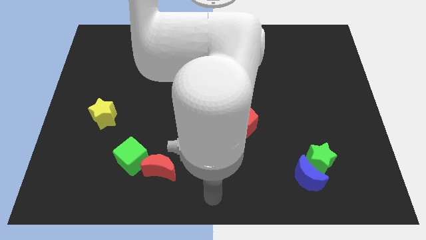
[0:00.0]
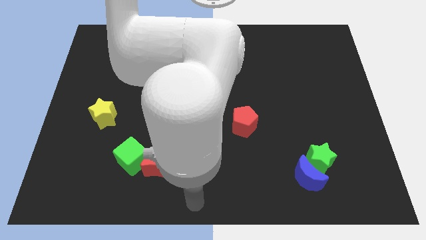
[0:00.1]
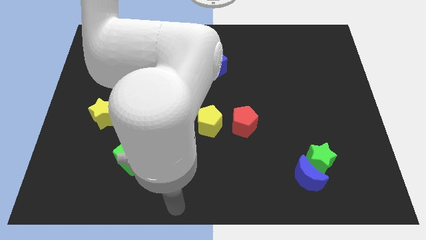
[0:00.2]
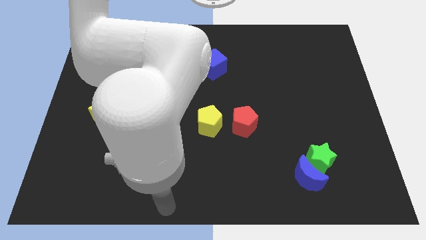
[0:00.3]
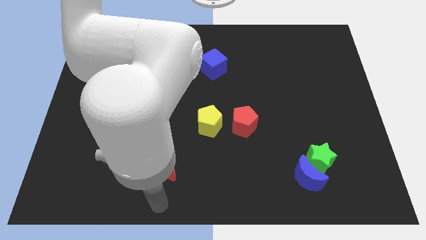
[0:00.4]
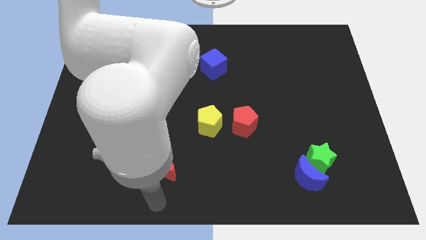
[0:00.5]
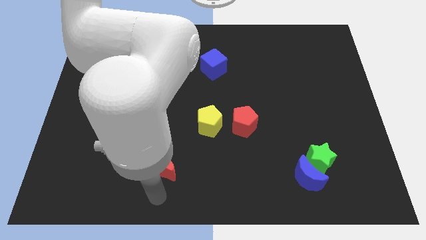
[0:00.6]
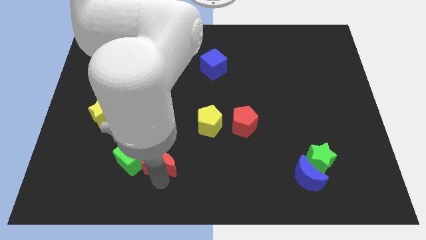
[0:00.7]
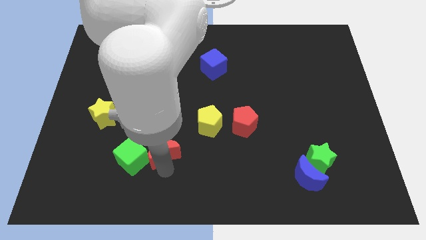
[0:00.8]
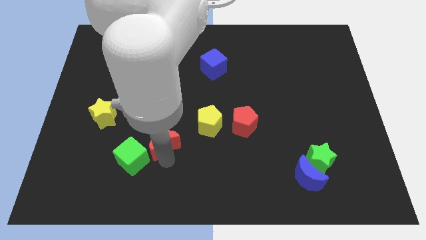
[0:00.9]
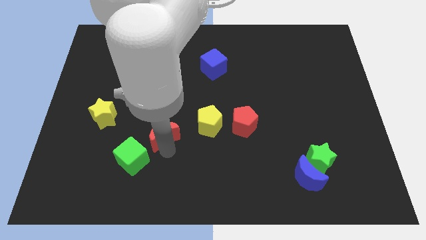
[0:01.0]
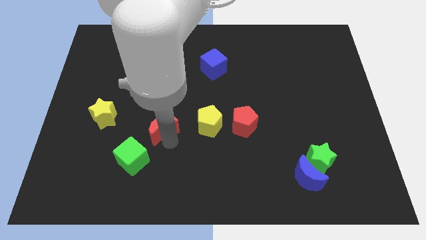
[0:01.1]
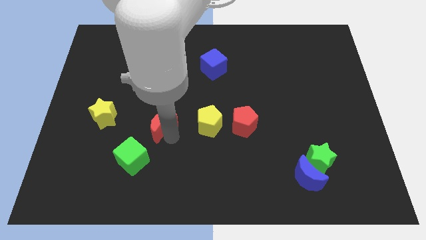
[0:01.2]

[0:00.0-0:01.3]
separate red moon from the green cube

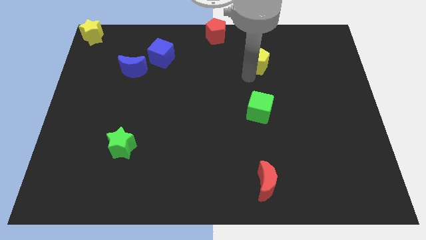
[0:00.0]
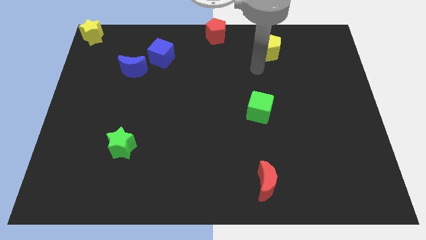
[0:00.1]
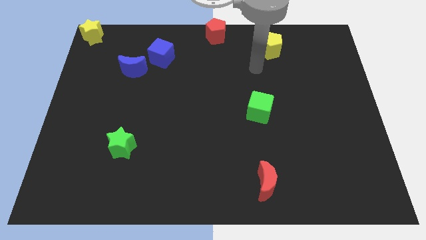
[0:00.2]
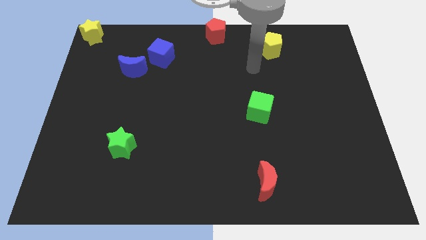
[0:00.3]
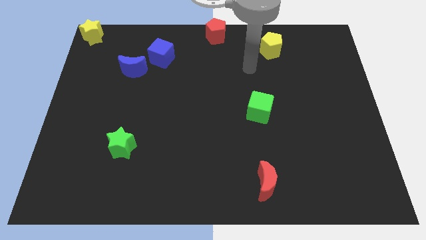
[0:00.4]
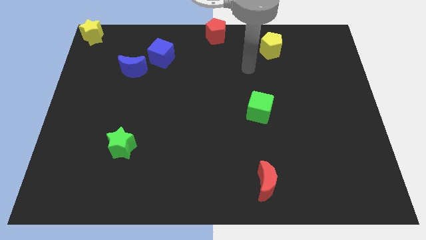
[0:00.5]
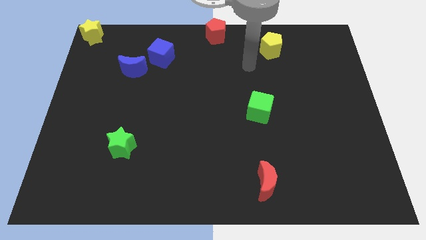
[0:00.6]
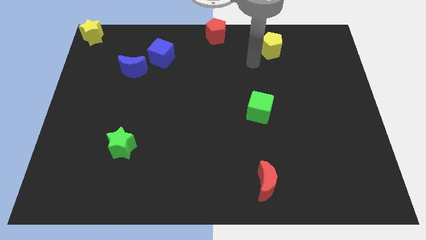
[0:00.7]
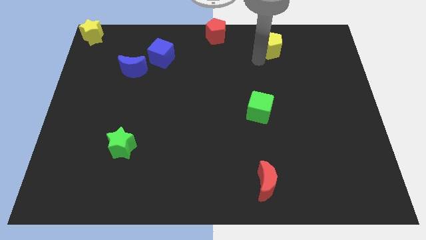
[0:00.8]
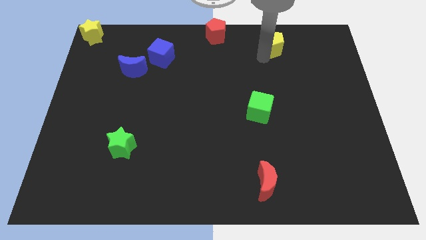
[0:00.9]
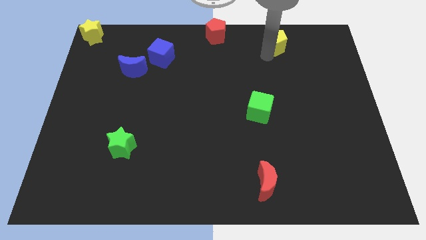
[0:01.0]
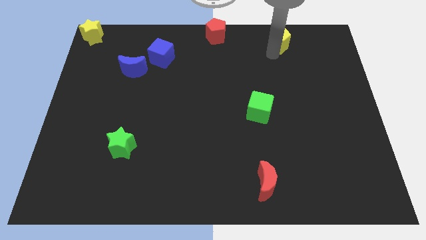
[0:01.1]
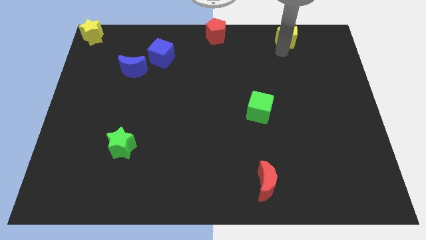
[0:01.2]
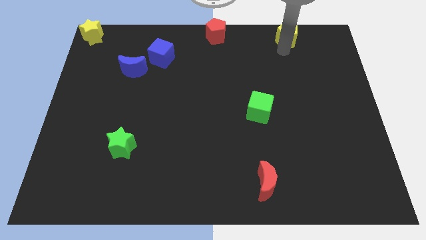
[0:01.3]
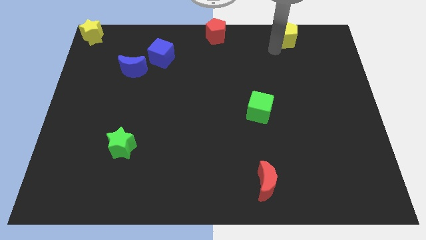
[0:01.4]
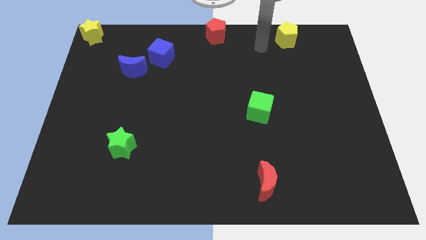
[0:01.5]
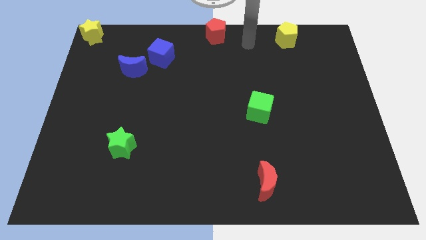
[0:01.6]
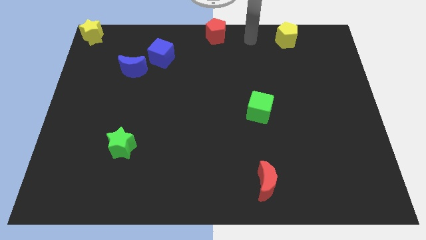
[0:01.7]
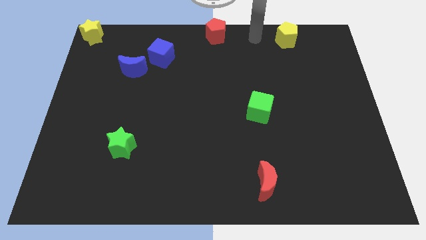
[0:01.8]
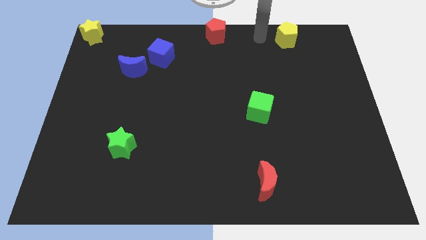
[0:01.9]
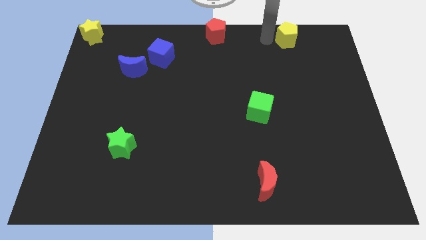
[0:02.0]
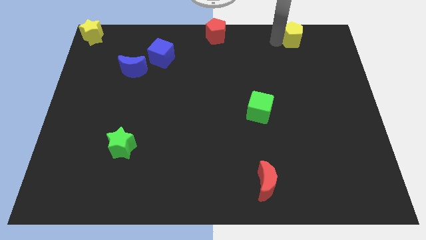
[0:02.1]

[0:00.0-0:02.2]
place the yellow pentagon parallel to the red pentagon

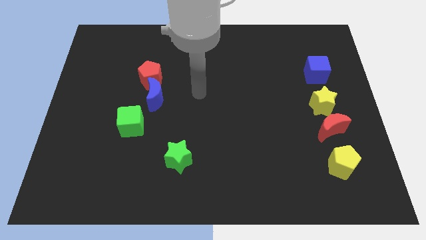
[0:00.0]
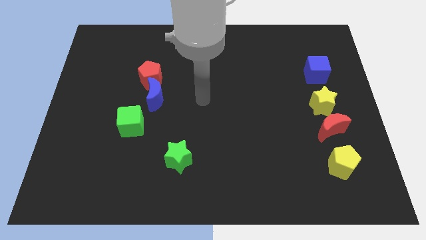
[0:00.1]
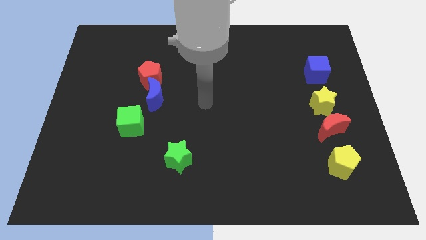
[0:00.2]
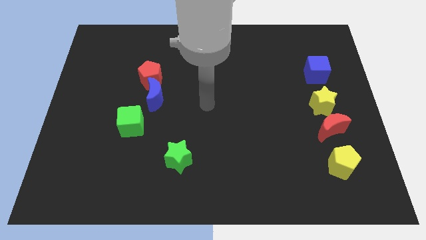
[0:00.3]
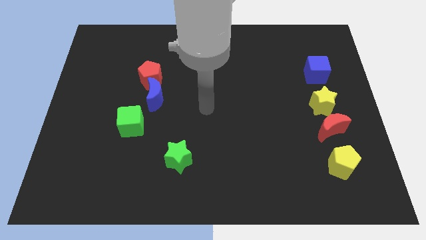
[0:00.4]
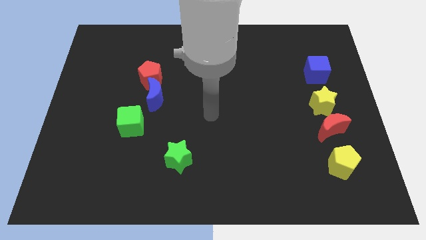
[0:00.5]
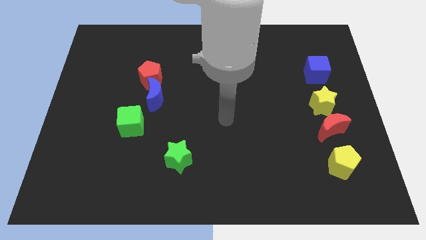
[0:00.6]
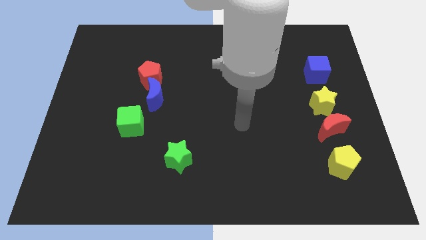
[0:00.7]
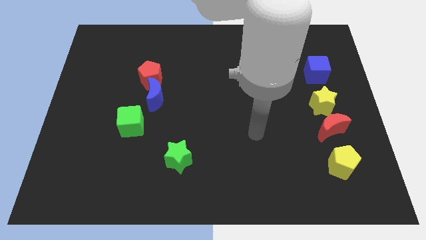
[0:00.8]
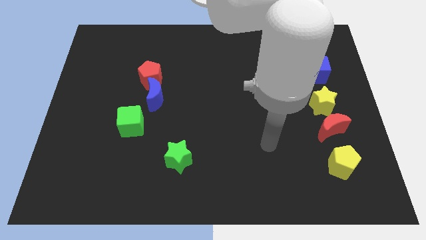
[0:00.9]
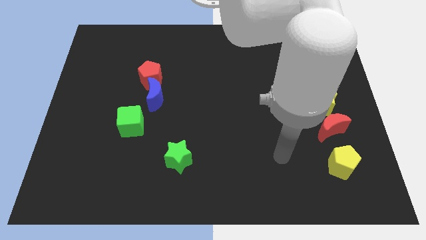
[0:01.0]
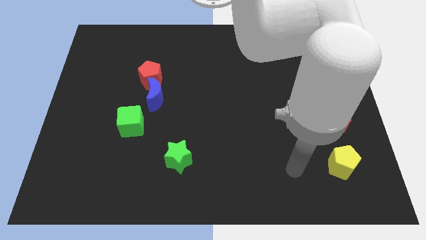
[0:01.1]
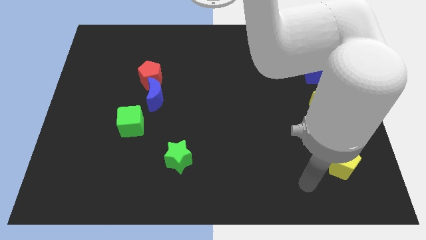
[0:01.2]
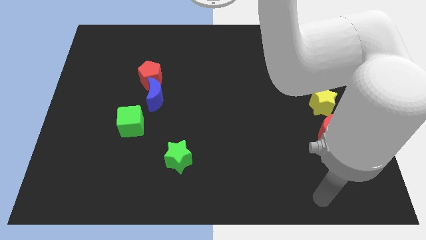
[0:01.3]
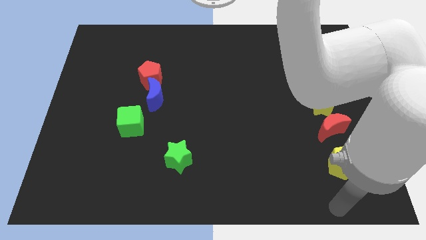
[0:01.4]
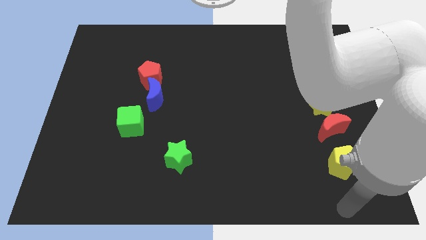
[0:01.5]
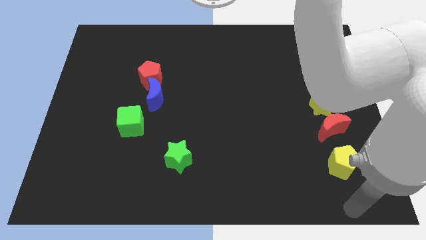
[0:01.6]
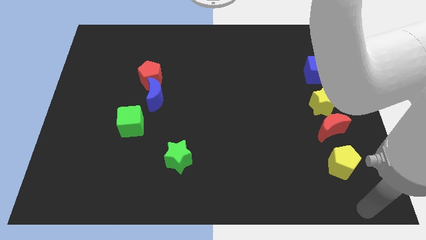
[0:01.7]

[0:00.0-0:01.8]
point your arm at the bottom side of the yellow pentagon

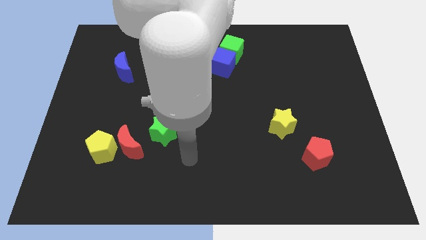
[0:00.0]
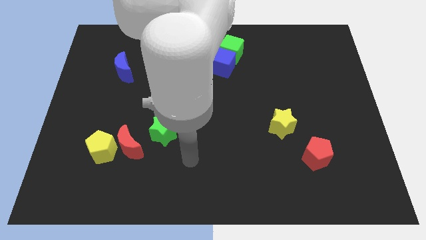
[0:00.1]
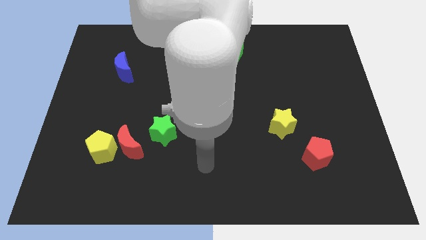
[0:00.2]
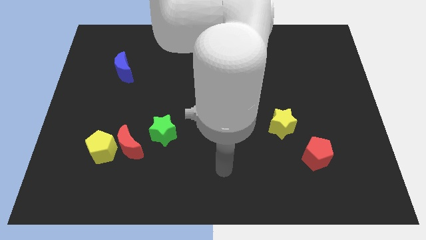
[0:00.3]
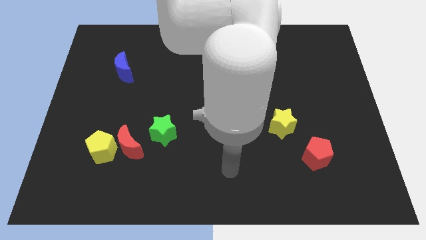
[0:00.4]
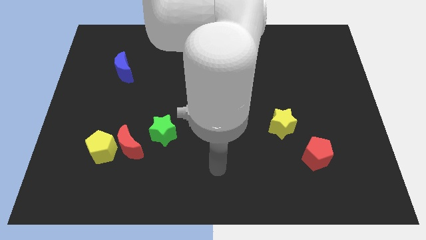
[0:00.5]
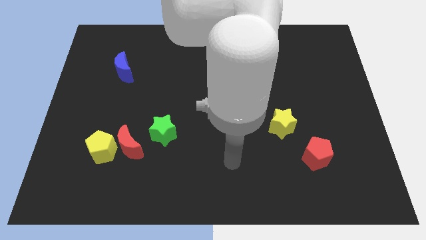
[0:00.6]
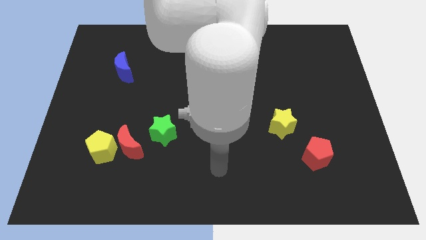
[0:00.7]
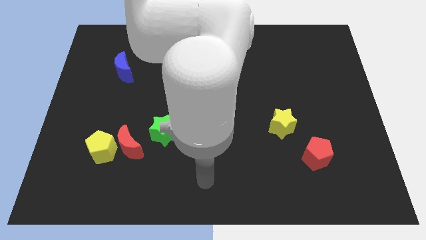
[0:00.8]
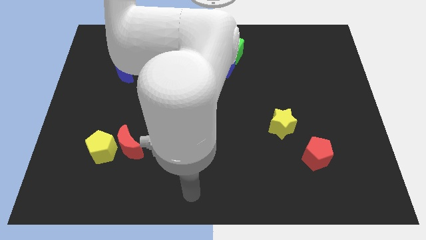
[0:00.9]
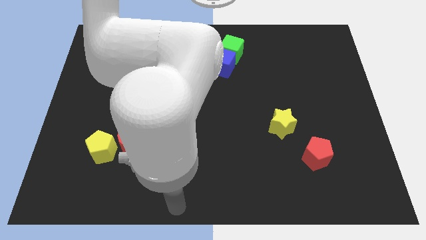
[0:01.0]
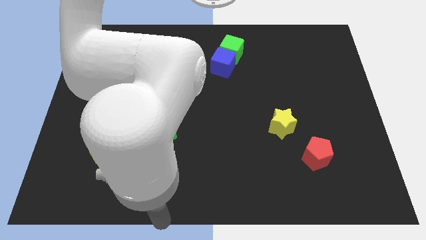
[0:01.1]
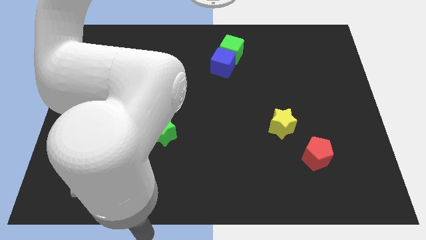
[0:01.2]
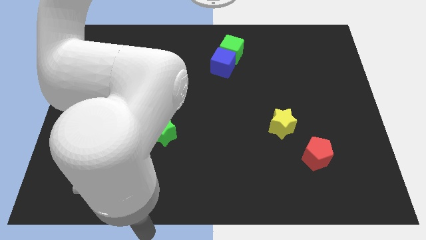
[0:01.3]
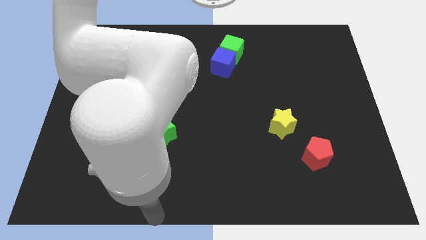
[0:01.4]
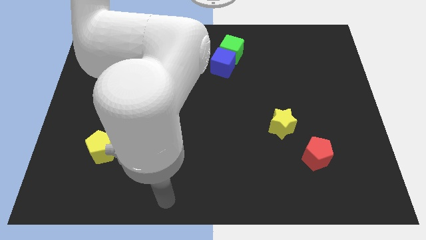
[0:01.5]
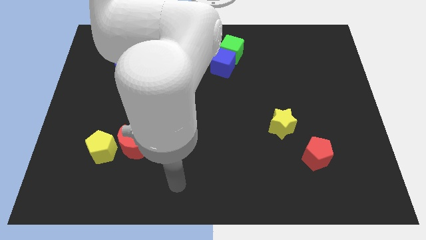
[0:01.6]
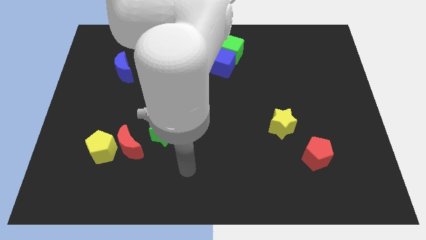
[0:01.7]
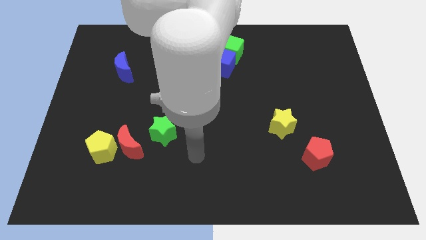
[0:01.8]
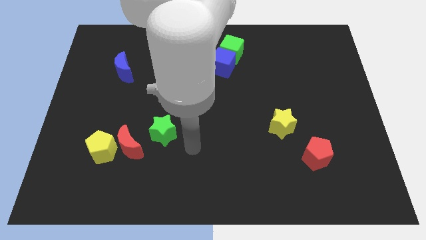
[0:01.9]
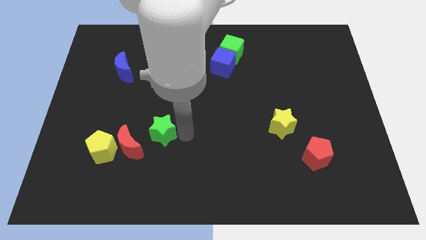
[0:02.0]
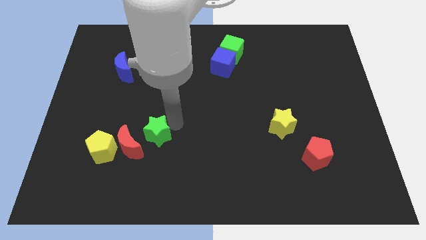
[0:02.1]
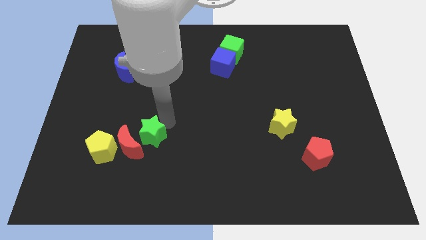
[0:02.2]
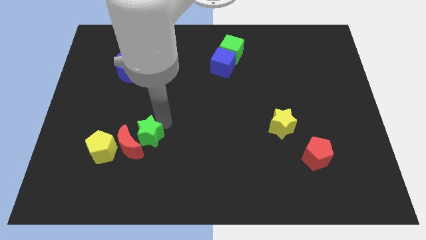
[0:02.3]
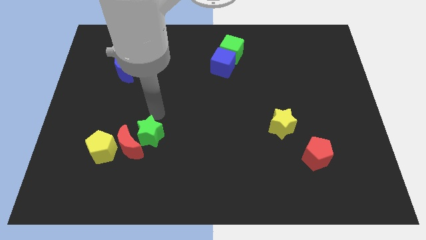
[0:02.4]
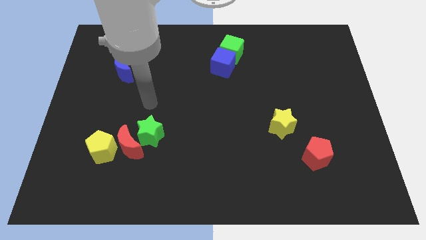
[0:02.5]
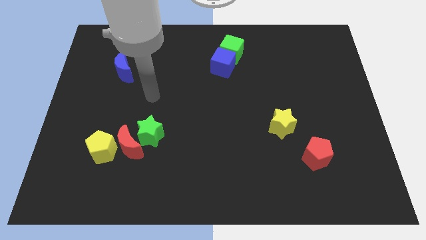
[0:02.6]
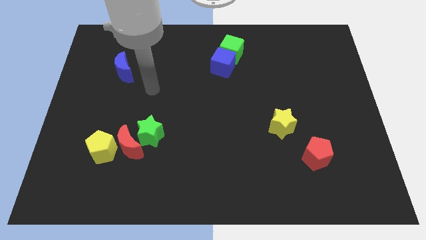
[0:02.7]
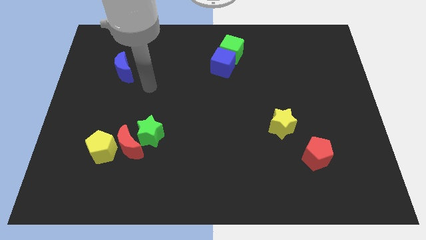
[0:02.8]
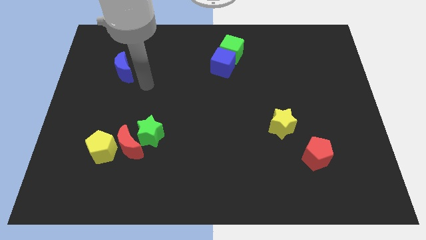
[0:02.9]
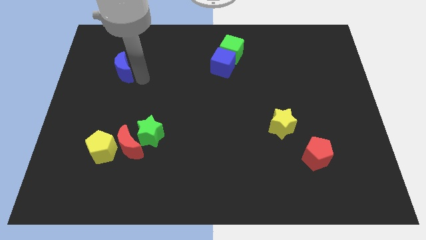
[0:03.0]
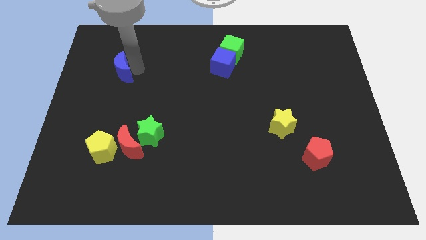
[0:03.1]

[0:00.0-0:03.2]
move the green star close to the red crescent

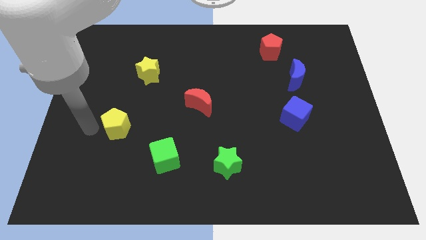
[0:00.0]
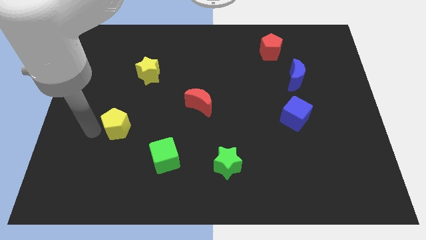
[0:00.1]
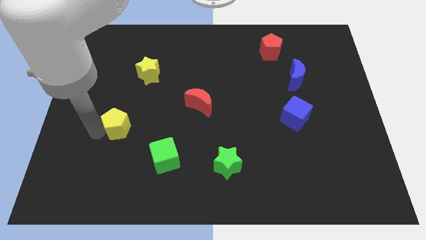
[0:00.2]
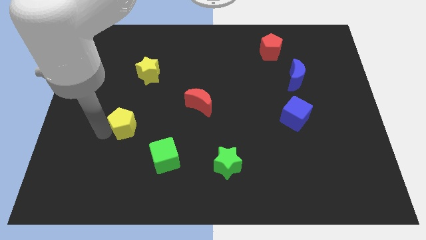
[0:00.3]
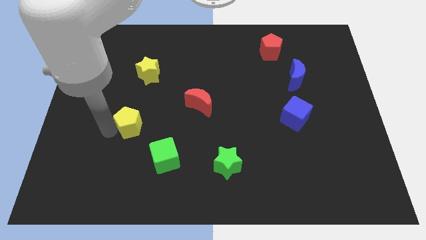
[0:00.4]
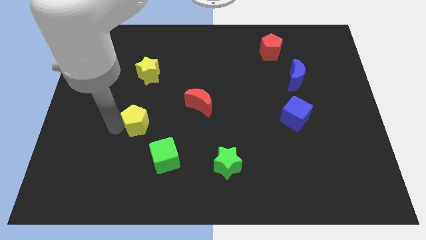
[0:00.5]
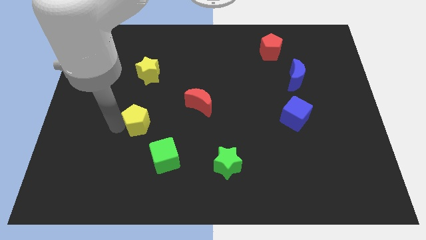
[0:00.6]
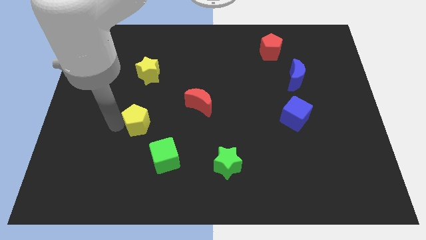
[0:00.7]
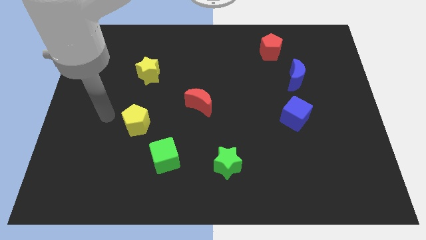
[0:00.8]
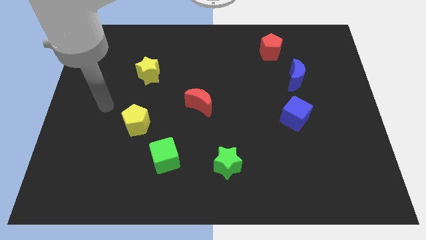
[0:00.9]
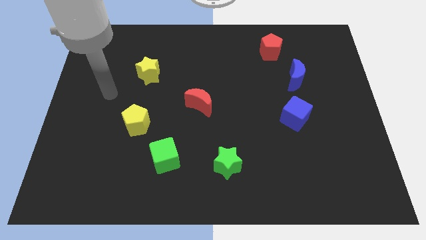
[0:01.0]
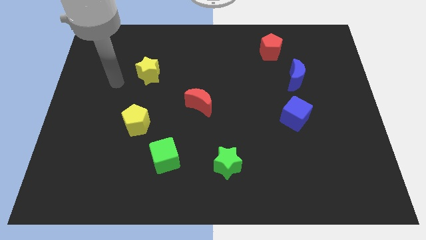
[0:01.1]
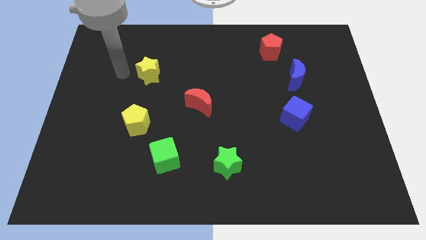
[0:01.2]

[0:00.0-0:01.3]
push the yellow pentagon to the right of the board
